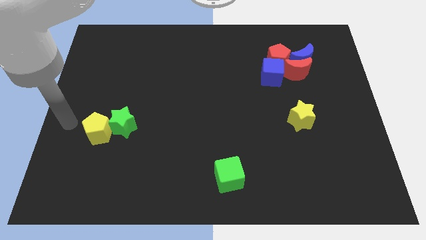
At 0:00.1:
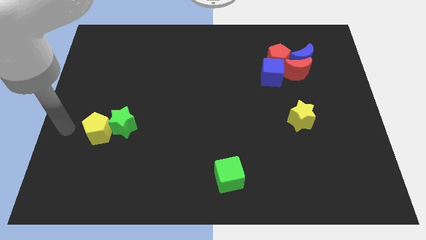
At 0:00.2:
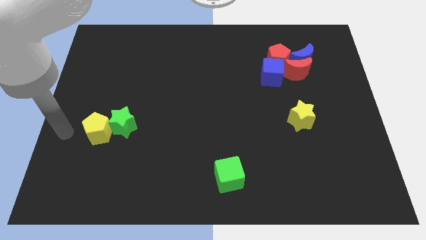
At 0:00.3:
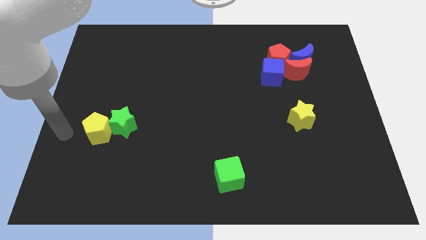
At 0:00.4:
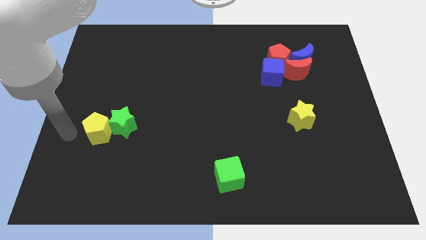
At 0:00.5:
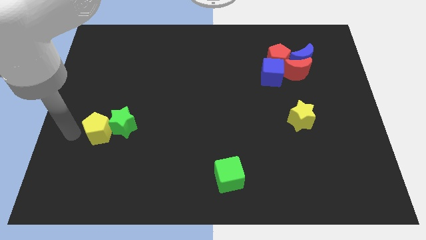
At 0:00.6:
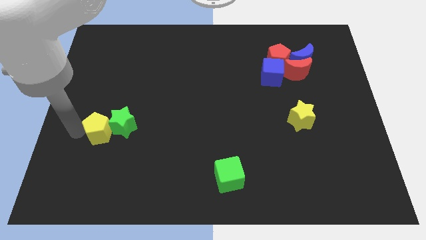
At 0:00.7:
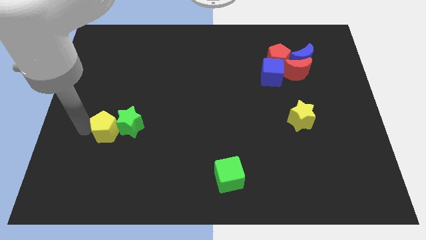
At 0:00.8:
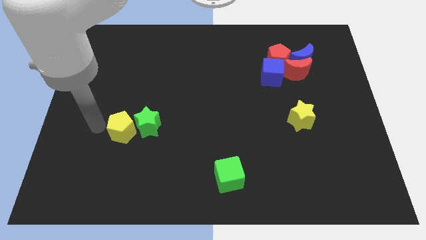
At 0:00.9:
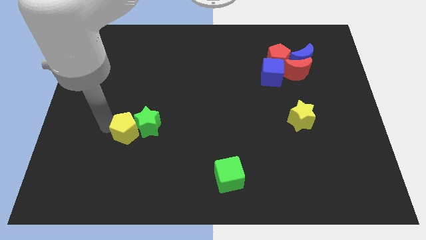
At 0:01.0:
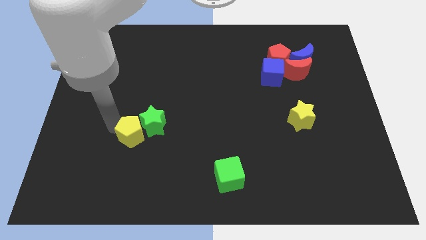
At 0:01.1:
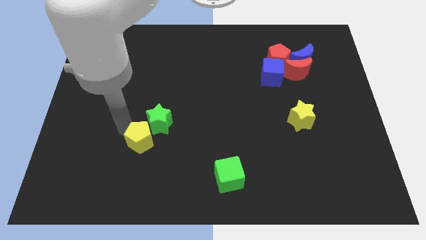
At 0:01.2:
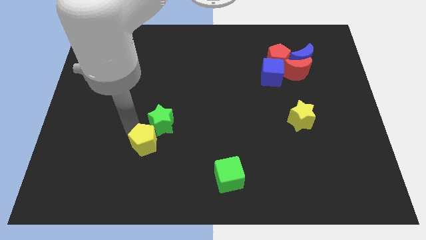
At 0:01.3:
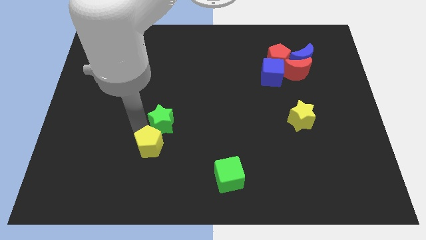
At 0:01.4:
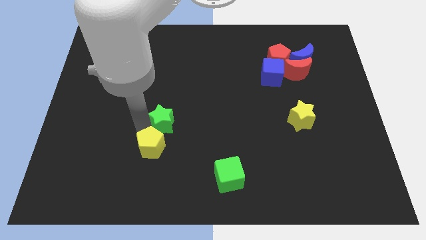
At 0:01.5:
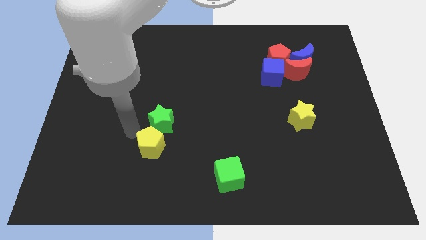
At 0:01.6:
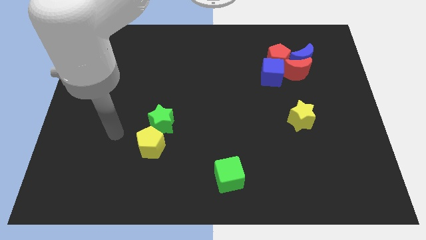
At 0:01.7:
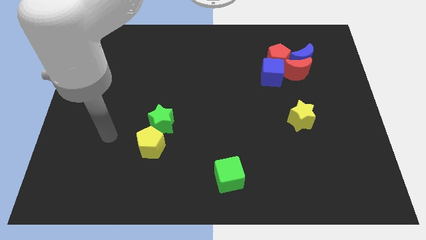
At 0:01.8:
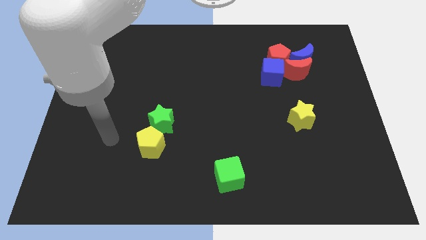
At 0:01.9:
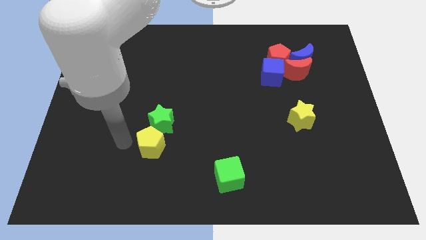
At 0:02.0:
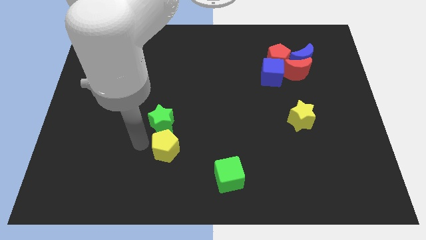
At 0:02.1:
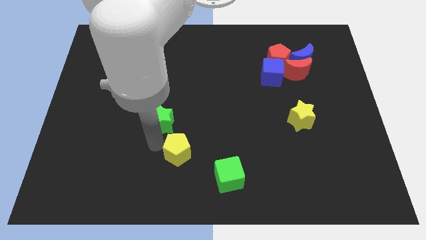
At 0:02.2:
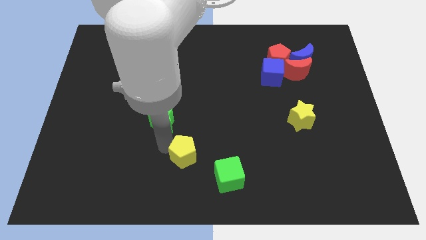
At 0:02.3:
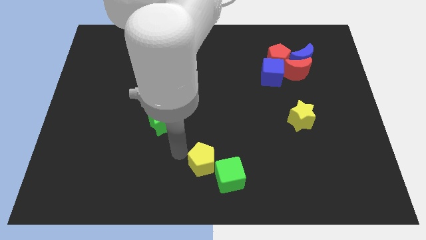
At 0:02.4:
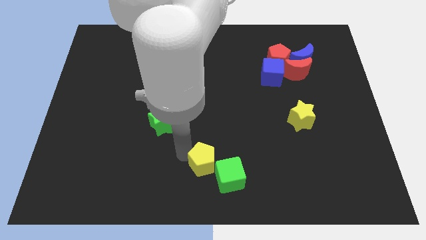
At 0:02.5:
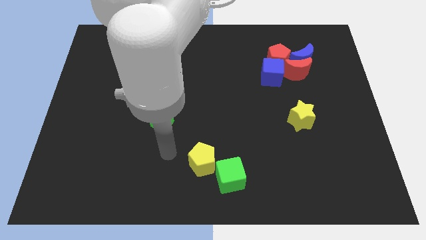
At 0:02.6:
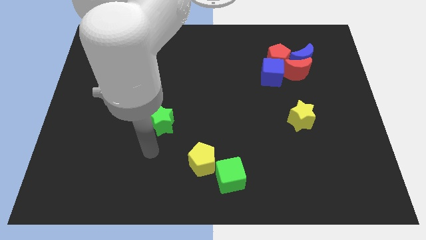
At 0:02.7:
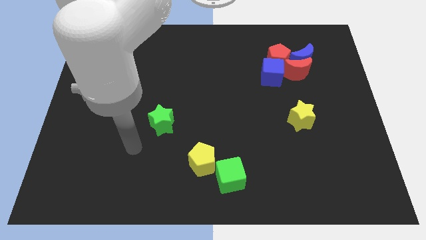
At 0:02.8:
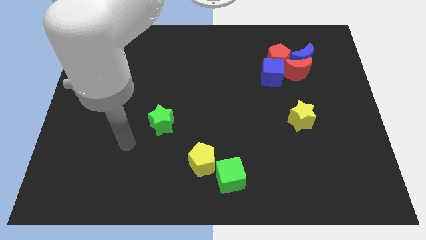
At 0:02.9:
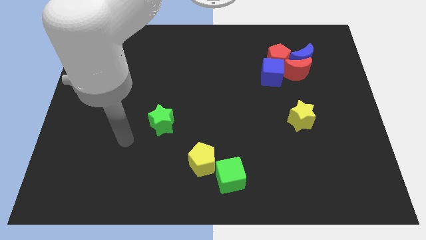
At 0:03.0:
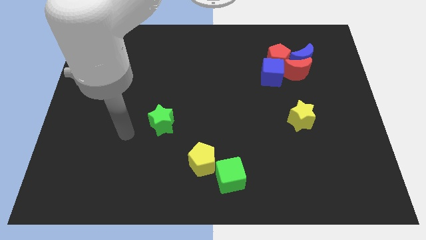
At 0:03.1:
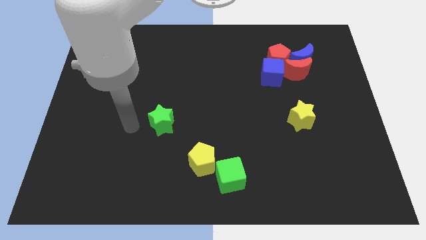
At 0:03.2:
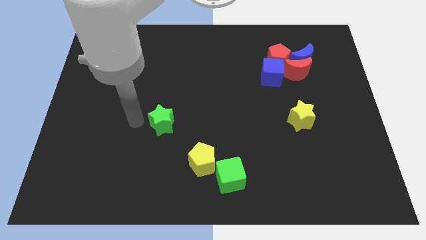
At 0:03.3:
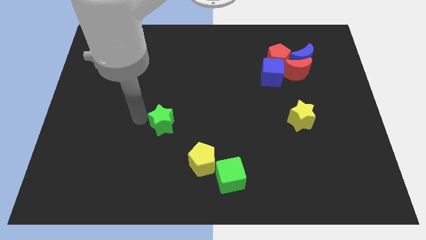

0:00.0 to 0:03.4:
place yellow pentagon to the top right of the green cube

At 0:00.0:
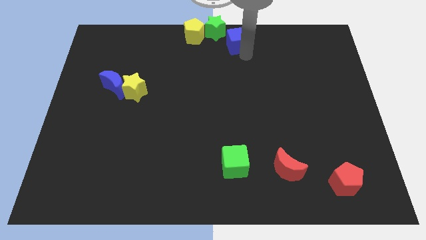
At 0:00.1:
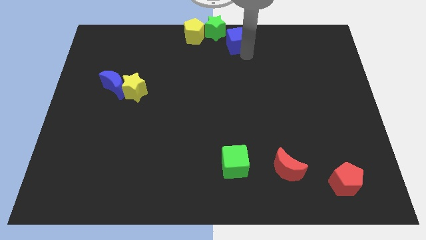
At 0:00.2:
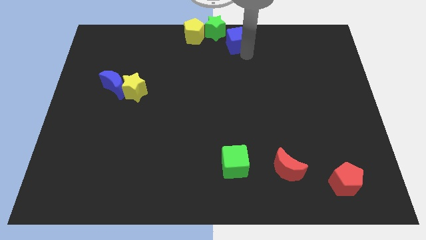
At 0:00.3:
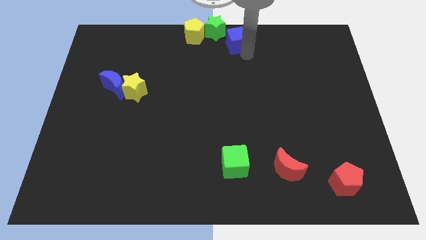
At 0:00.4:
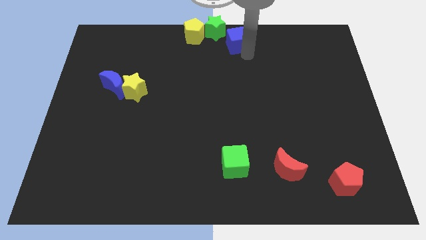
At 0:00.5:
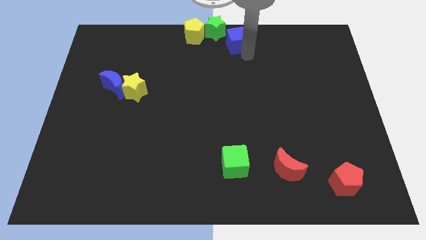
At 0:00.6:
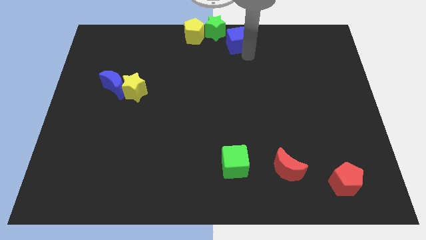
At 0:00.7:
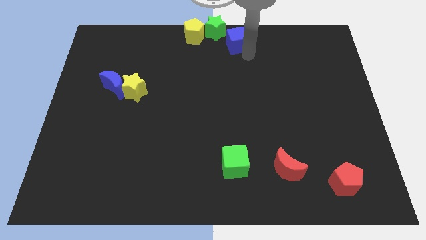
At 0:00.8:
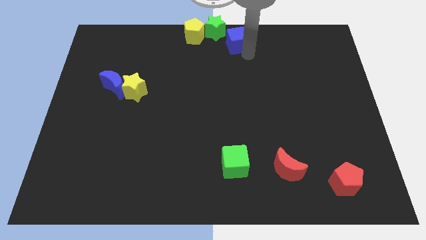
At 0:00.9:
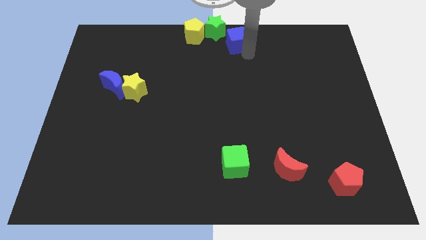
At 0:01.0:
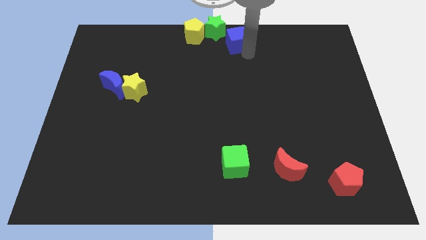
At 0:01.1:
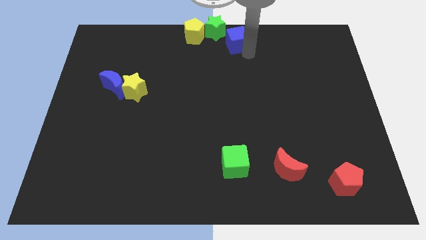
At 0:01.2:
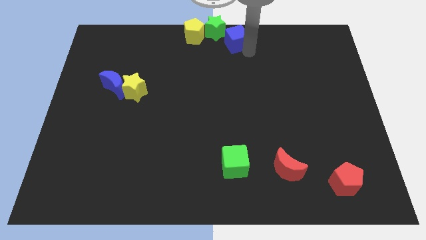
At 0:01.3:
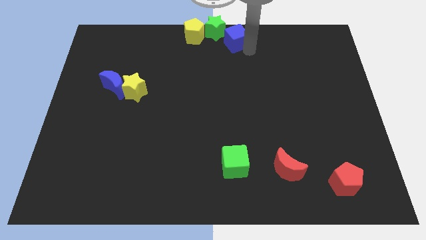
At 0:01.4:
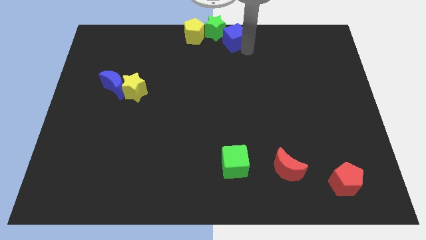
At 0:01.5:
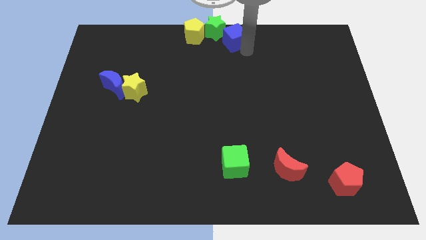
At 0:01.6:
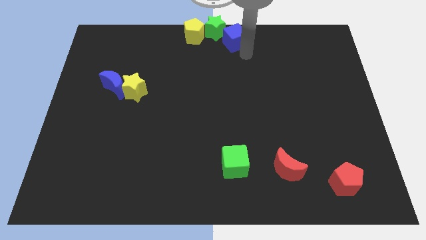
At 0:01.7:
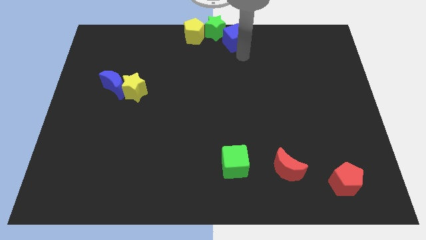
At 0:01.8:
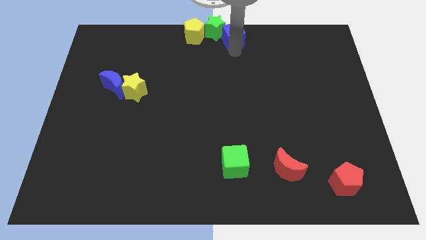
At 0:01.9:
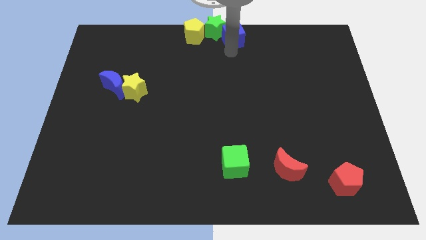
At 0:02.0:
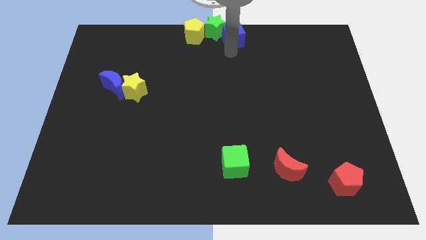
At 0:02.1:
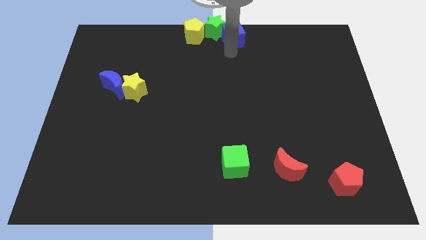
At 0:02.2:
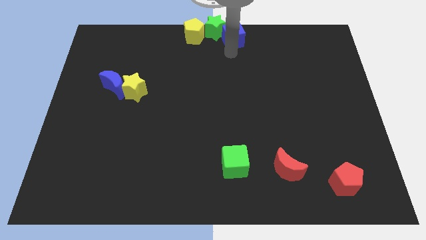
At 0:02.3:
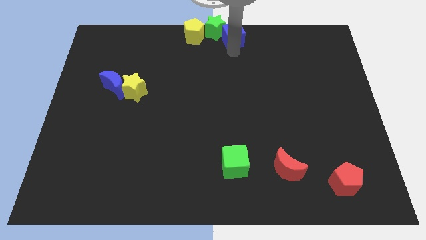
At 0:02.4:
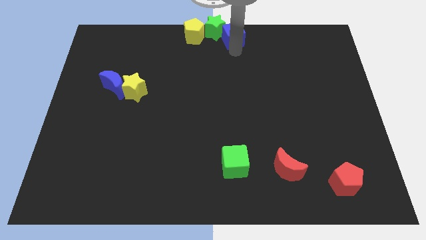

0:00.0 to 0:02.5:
put the blue cube into the green star

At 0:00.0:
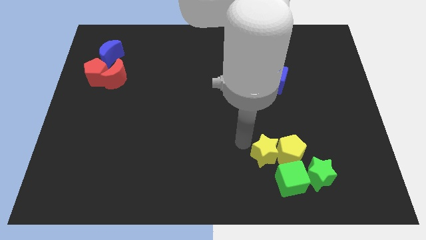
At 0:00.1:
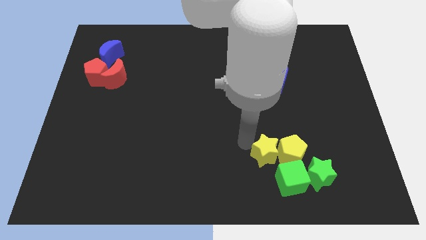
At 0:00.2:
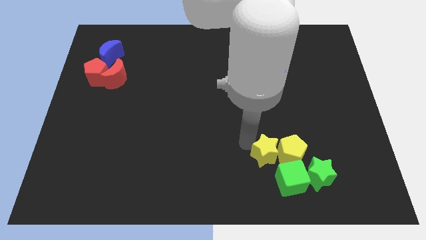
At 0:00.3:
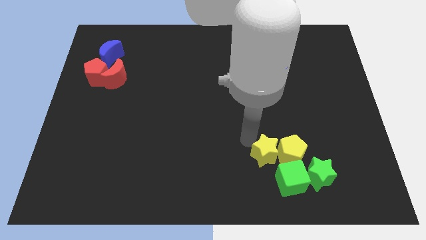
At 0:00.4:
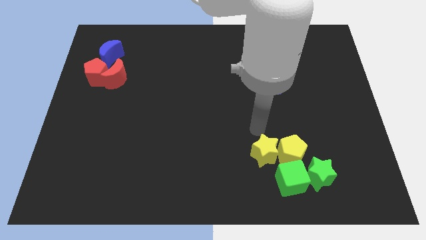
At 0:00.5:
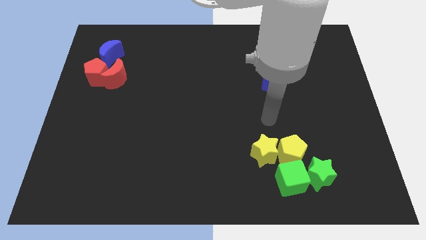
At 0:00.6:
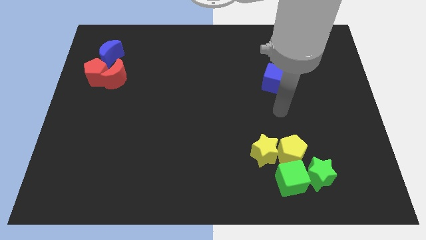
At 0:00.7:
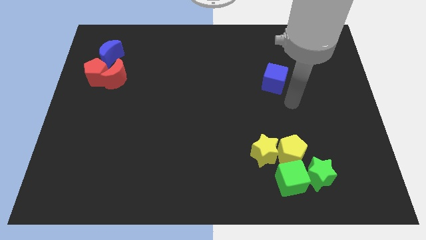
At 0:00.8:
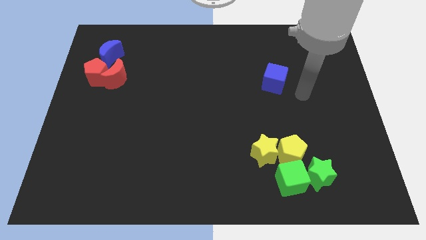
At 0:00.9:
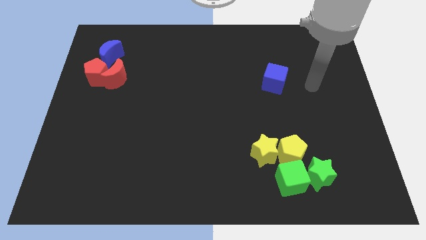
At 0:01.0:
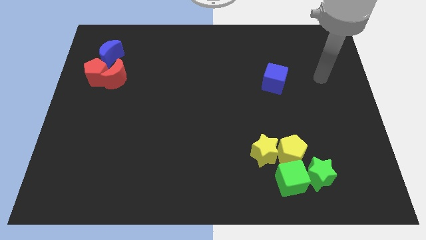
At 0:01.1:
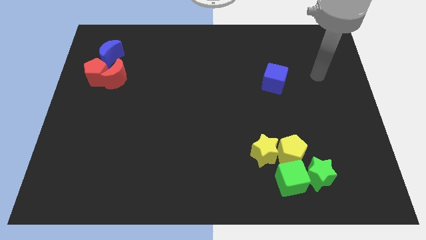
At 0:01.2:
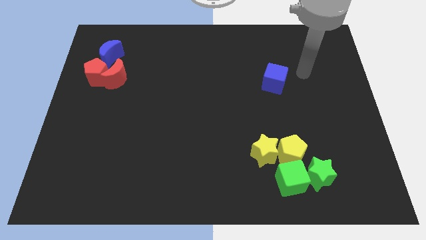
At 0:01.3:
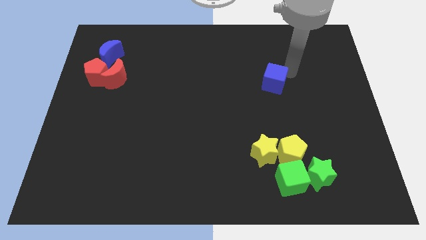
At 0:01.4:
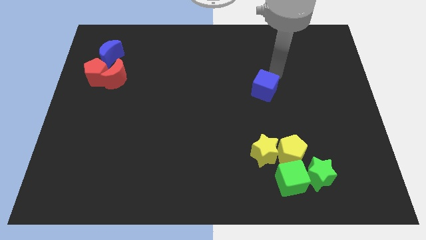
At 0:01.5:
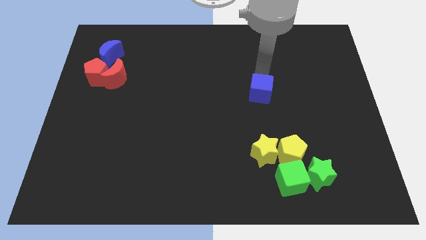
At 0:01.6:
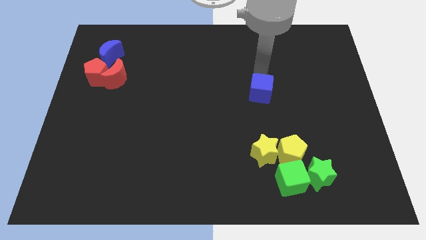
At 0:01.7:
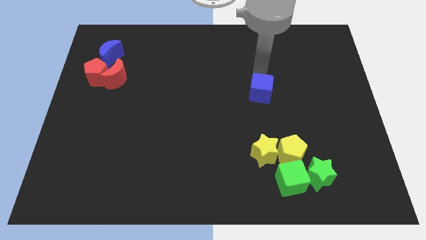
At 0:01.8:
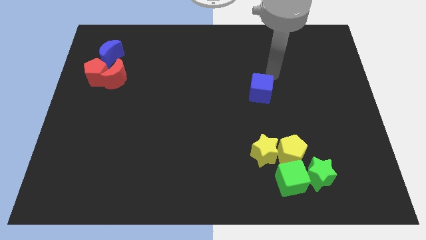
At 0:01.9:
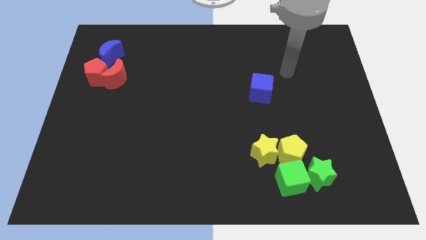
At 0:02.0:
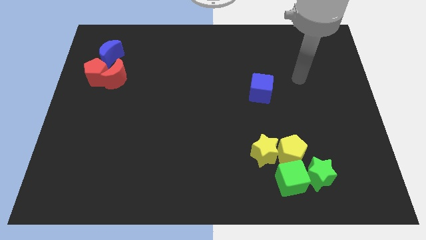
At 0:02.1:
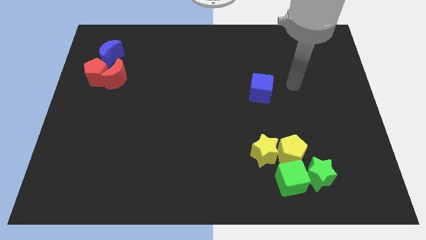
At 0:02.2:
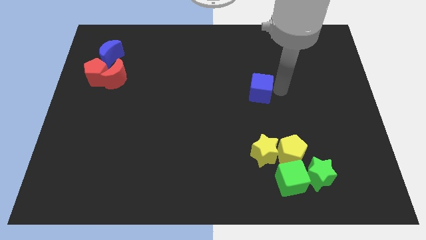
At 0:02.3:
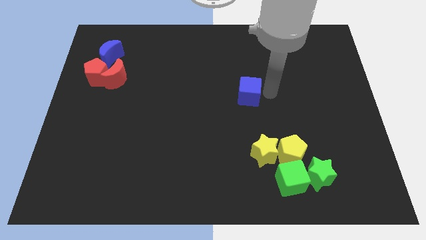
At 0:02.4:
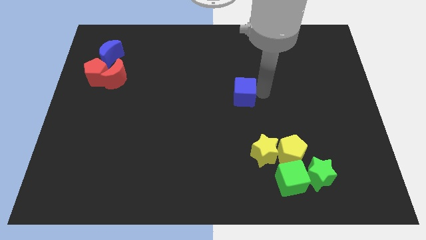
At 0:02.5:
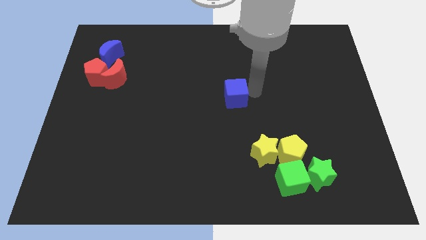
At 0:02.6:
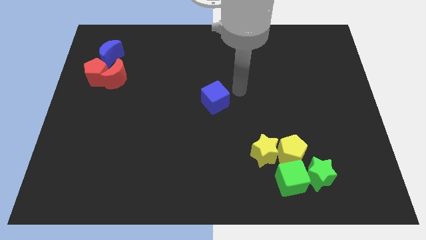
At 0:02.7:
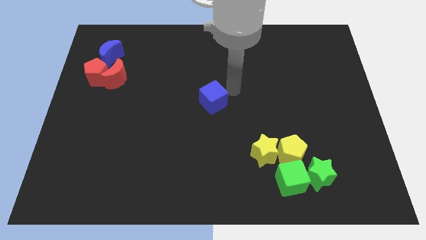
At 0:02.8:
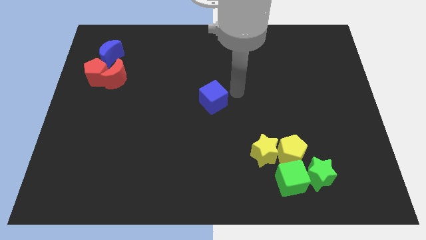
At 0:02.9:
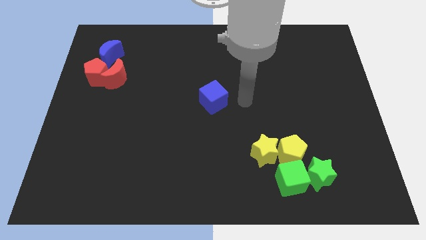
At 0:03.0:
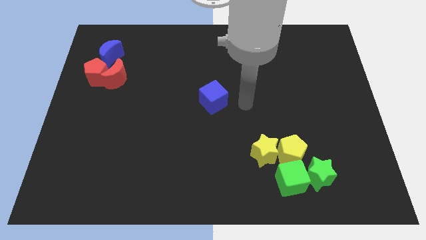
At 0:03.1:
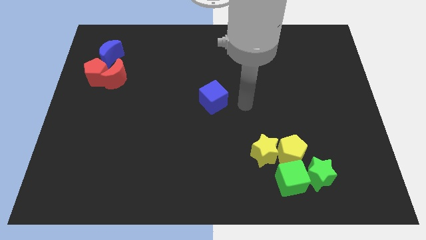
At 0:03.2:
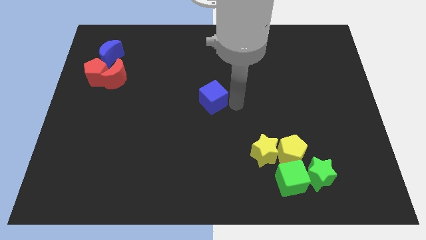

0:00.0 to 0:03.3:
slide the blue cube diagonally top left to the yellow blocks
